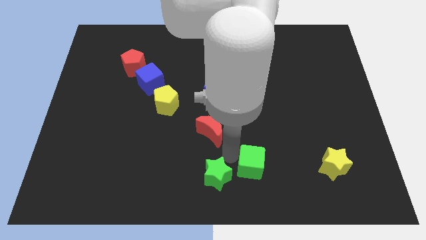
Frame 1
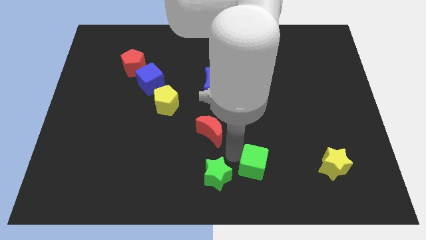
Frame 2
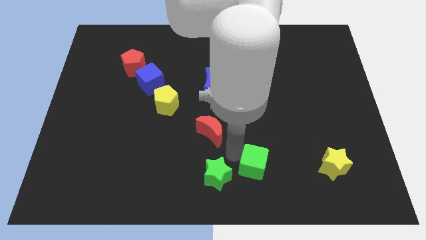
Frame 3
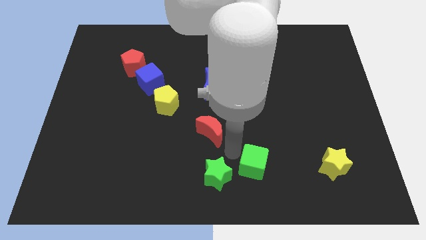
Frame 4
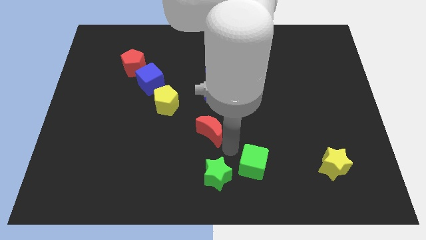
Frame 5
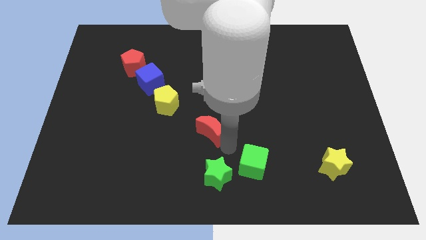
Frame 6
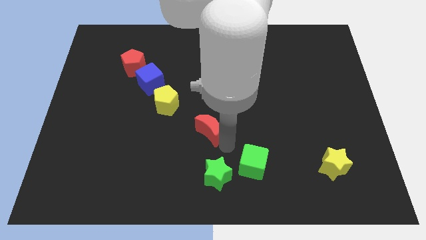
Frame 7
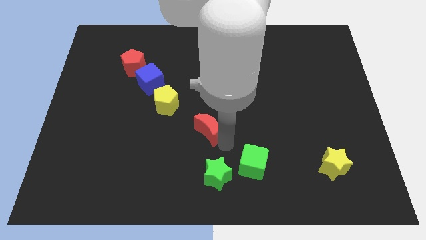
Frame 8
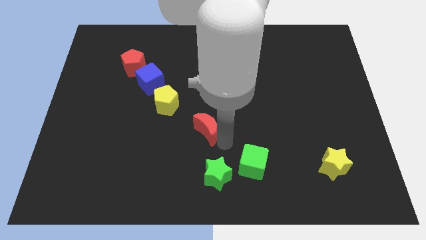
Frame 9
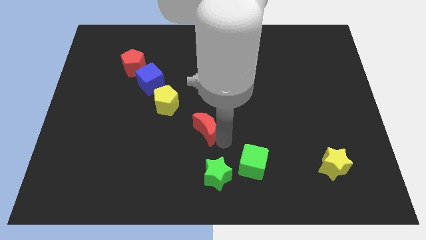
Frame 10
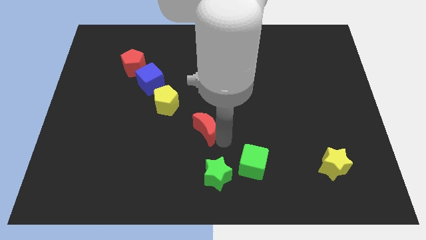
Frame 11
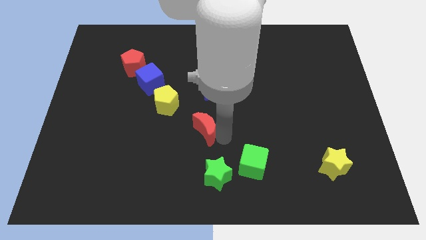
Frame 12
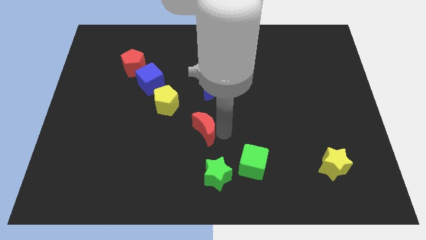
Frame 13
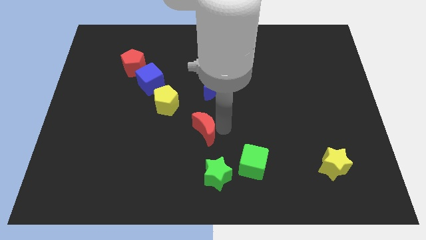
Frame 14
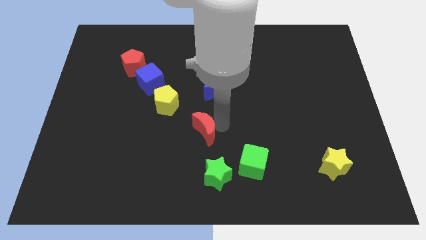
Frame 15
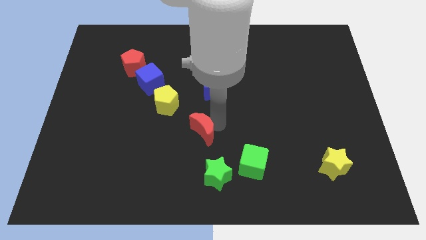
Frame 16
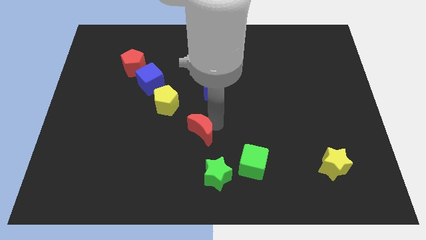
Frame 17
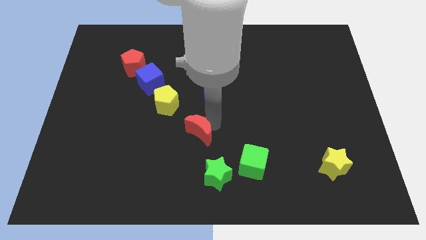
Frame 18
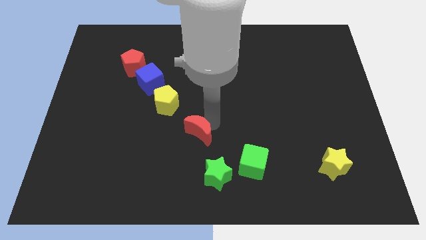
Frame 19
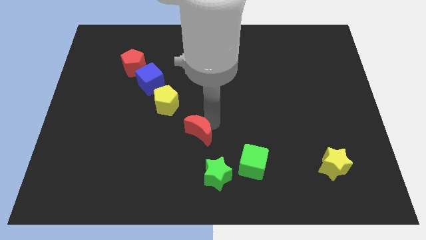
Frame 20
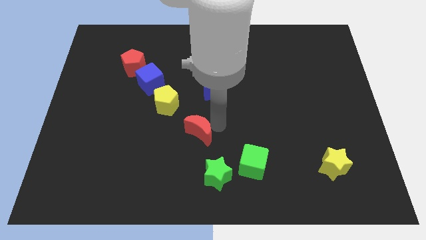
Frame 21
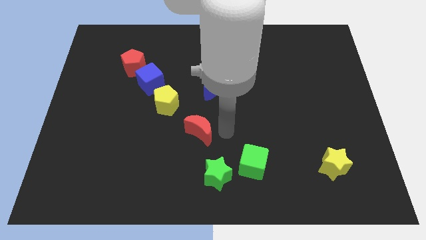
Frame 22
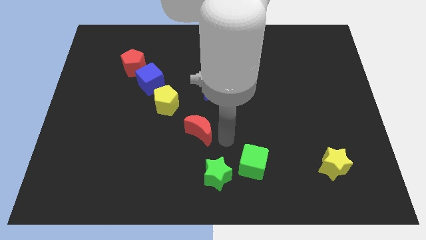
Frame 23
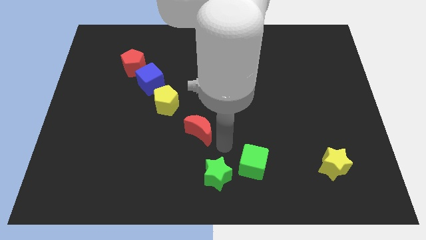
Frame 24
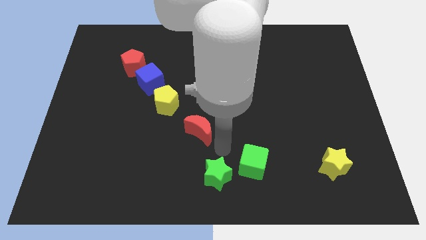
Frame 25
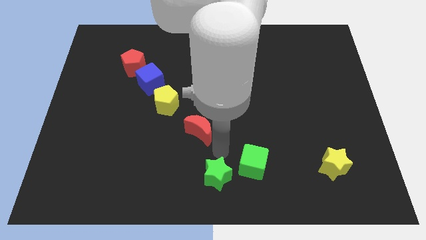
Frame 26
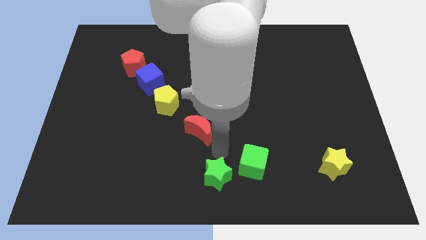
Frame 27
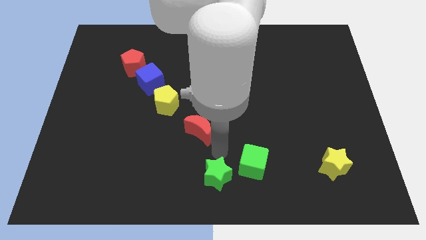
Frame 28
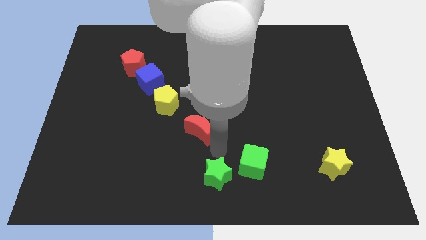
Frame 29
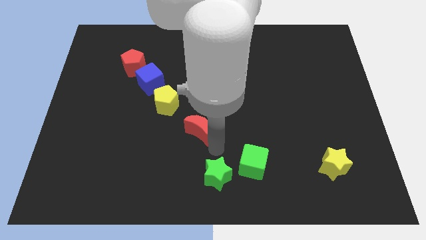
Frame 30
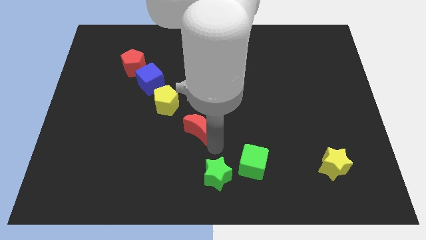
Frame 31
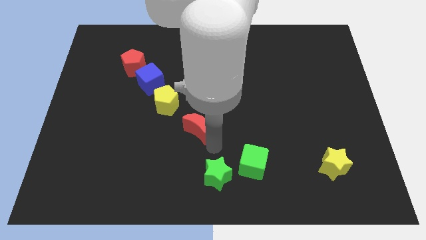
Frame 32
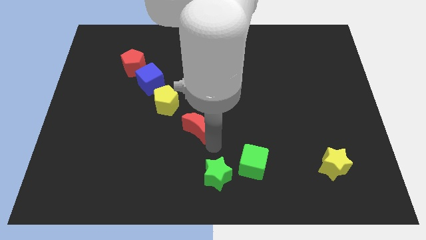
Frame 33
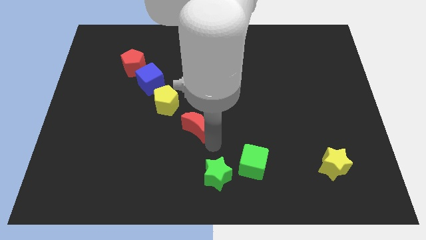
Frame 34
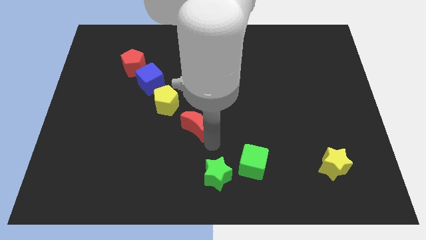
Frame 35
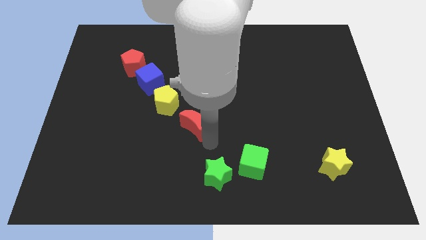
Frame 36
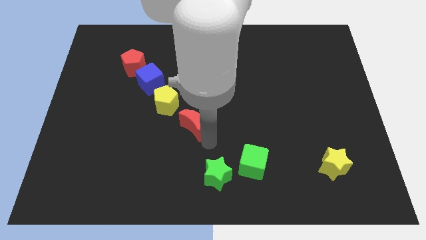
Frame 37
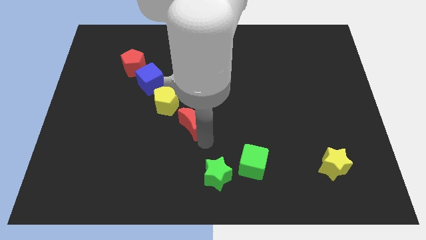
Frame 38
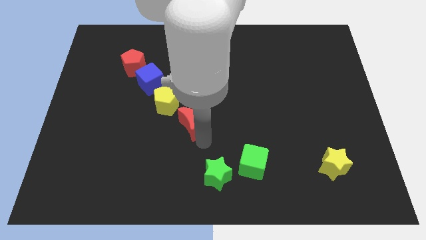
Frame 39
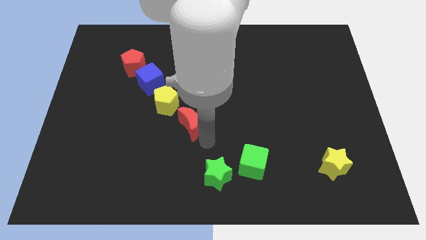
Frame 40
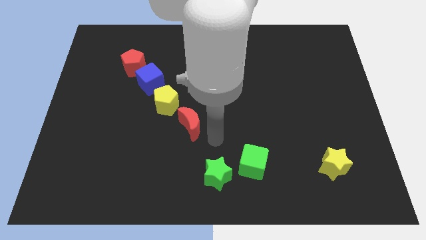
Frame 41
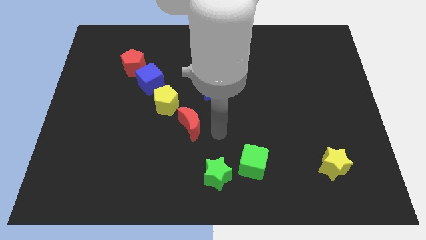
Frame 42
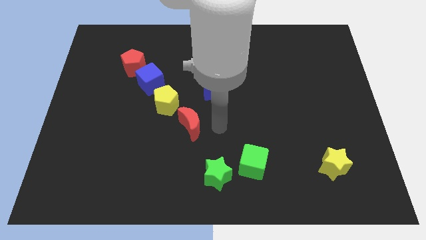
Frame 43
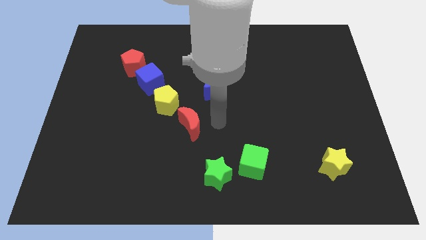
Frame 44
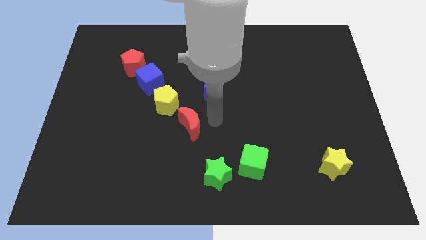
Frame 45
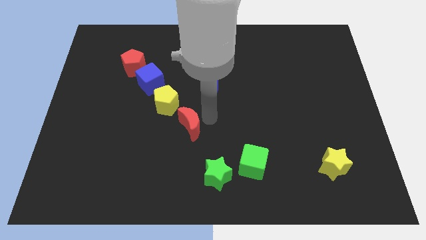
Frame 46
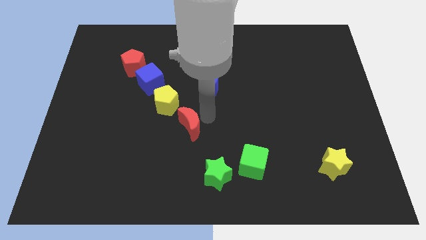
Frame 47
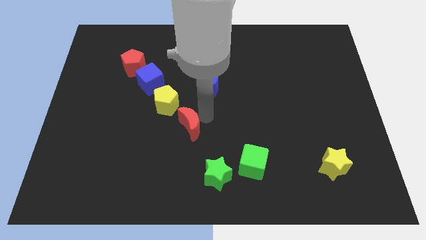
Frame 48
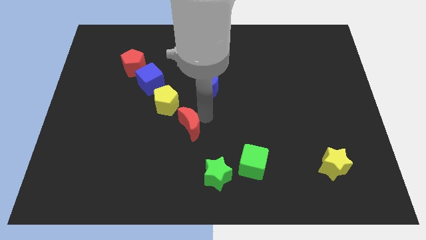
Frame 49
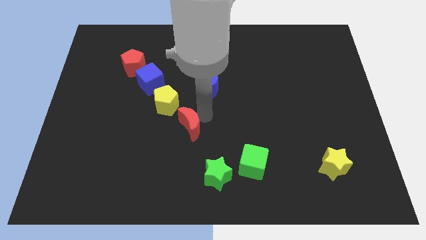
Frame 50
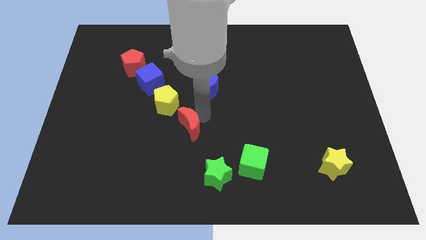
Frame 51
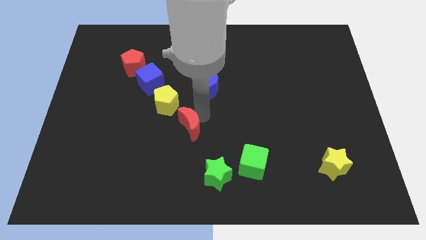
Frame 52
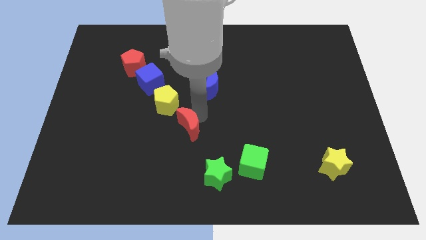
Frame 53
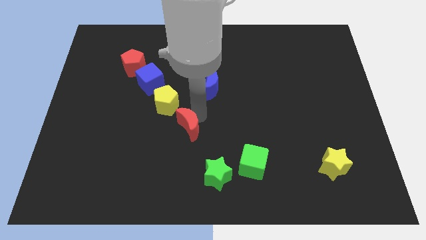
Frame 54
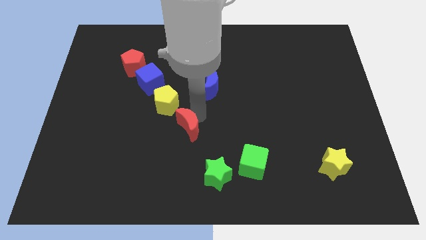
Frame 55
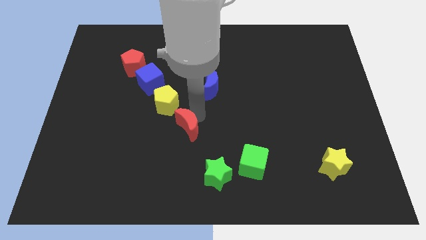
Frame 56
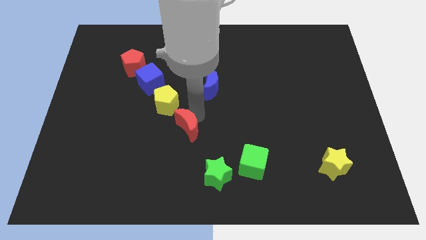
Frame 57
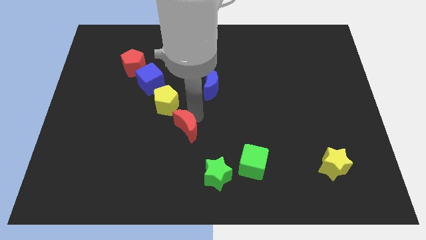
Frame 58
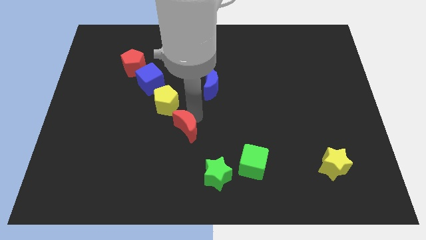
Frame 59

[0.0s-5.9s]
place red crescent down to the yellow pentagon so that 4 blocks make a line

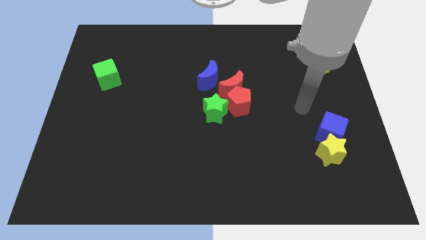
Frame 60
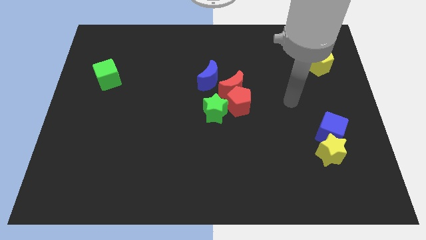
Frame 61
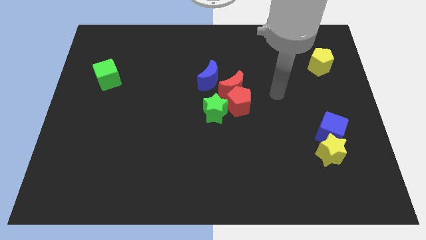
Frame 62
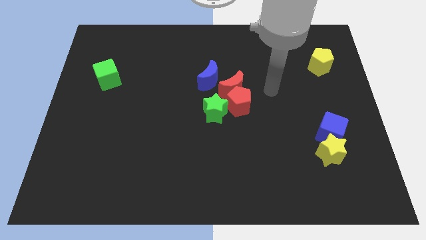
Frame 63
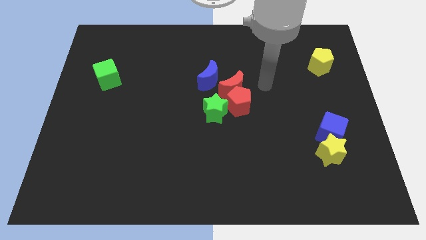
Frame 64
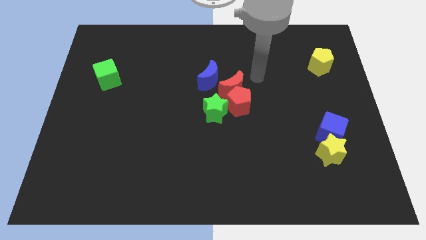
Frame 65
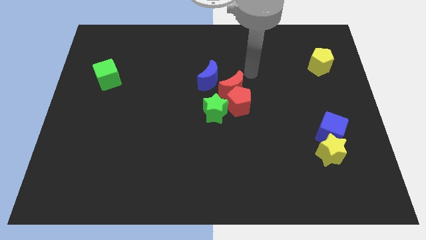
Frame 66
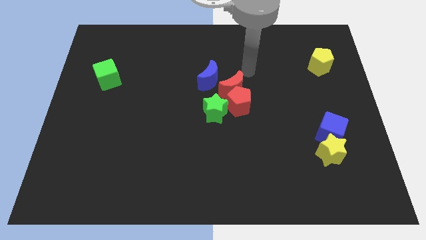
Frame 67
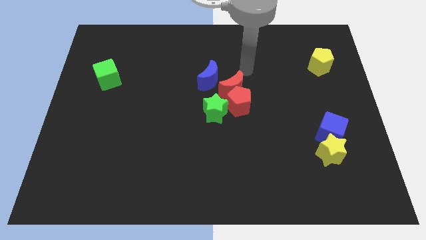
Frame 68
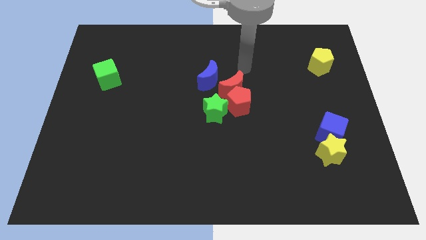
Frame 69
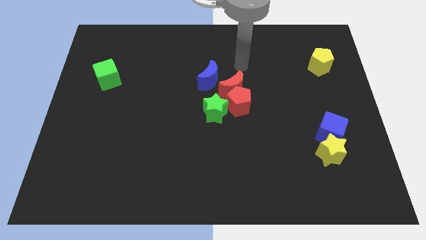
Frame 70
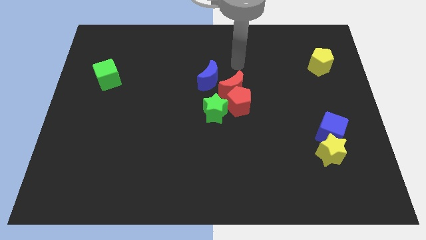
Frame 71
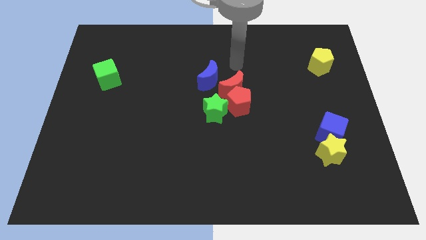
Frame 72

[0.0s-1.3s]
move the arm on the top of the red crescent

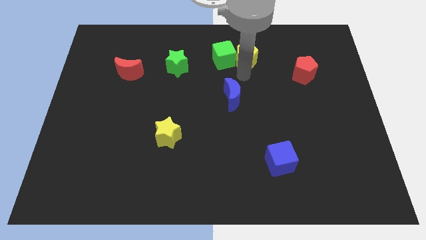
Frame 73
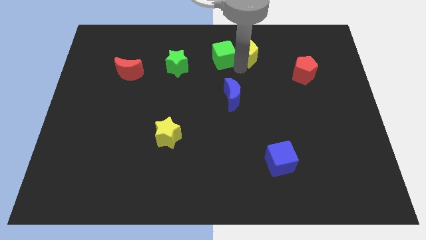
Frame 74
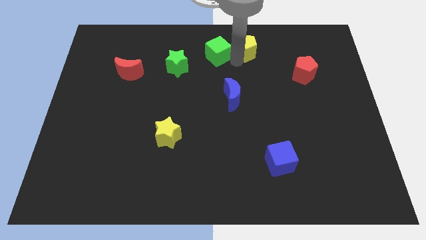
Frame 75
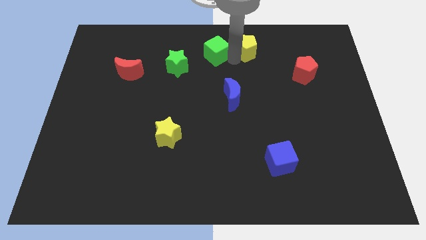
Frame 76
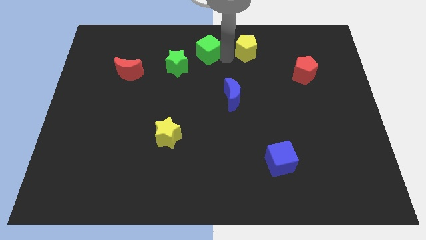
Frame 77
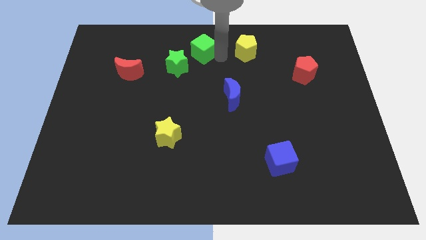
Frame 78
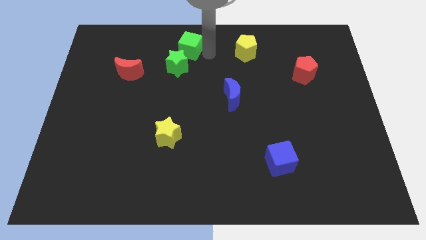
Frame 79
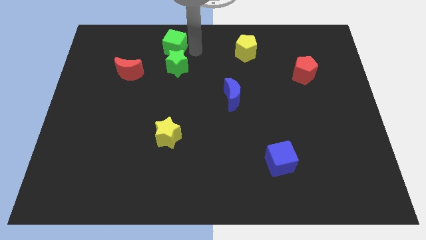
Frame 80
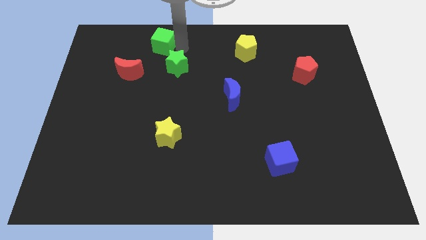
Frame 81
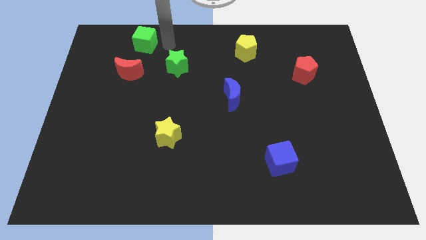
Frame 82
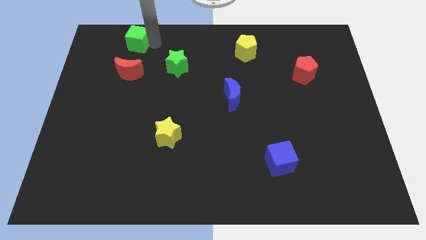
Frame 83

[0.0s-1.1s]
separate green cube from yellow pentagon

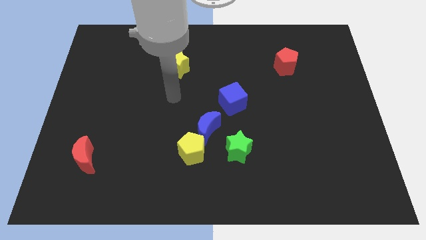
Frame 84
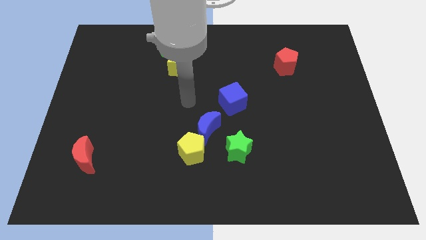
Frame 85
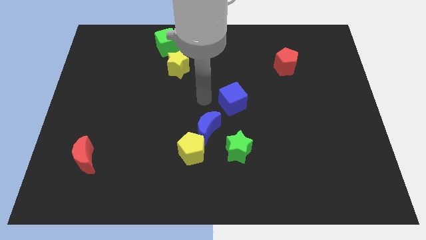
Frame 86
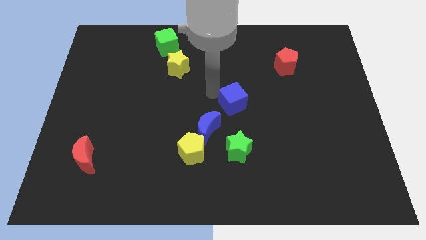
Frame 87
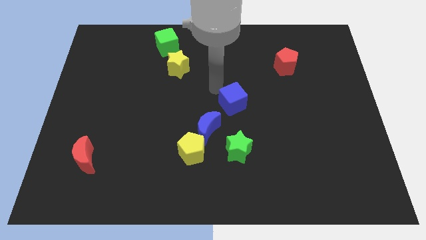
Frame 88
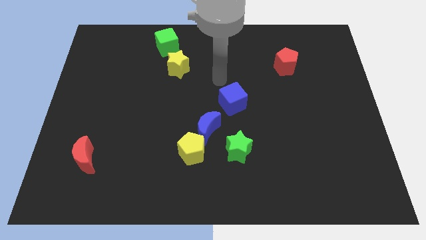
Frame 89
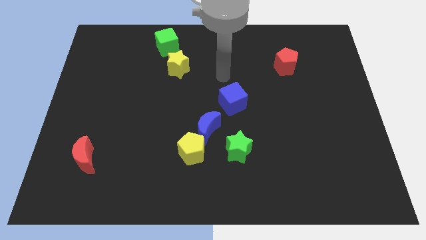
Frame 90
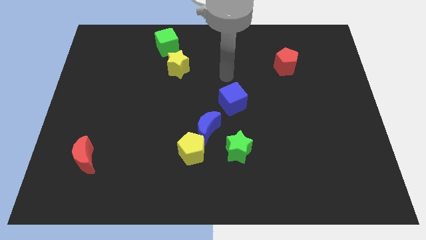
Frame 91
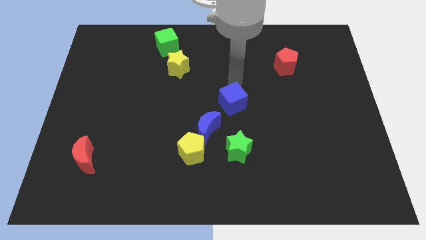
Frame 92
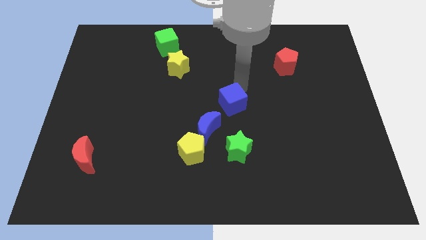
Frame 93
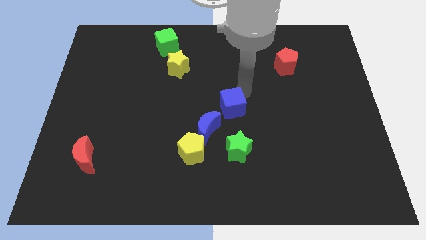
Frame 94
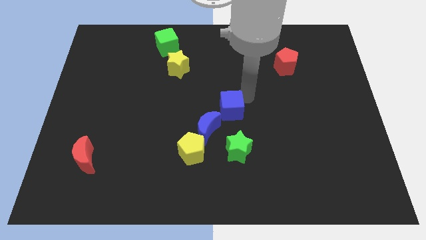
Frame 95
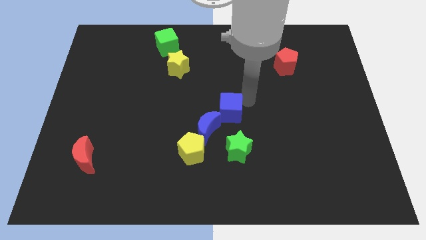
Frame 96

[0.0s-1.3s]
push the blue cube slightly to the bottom
